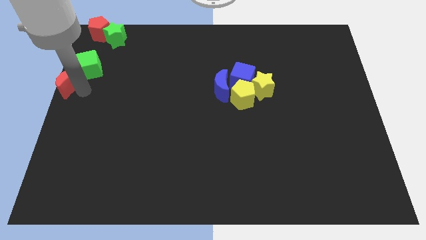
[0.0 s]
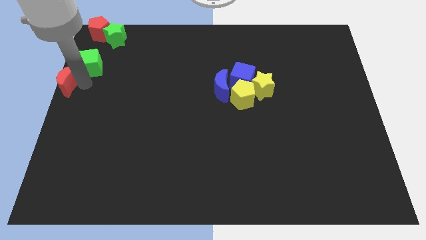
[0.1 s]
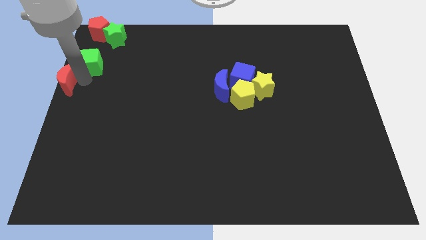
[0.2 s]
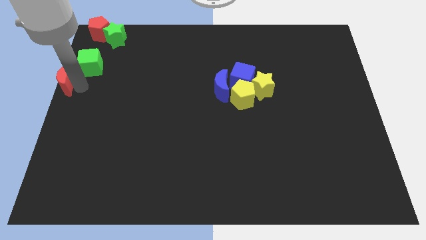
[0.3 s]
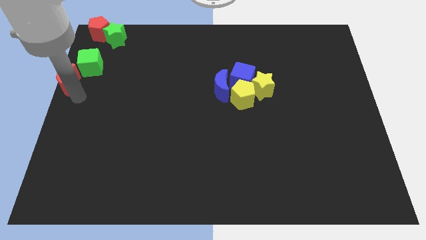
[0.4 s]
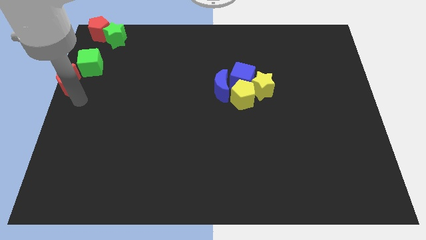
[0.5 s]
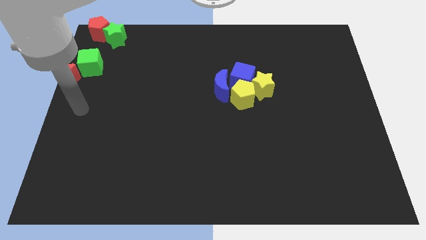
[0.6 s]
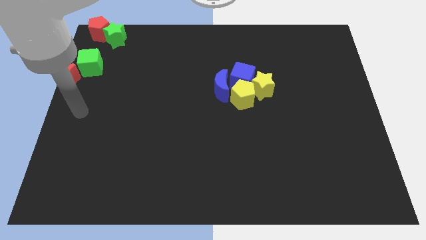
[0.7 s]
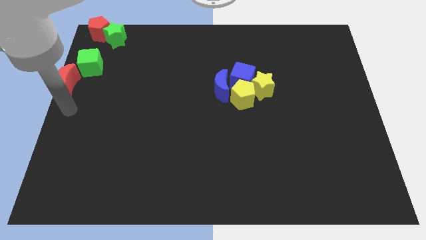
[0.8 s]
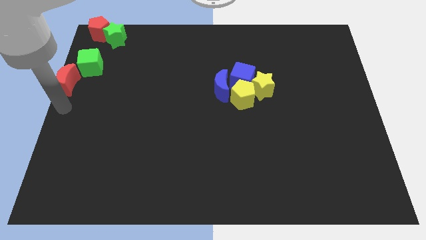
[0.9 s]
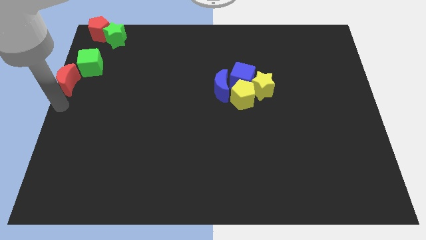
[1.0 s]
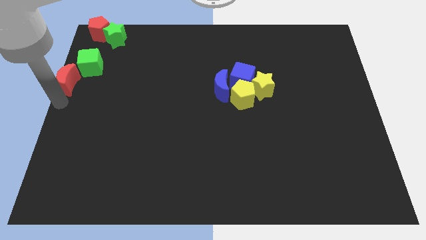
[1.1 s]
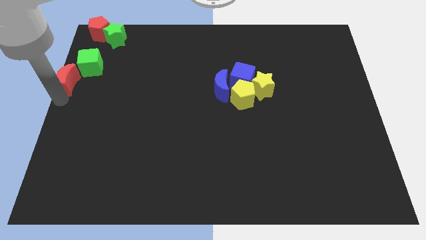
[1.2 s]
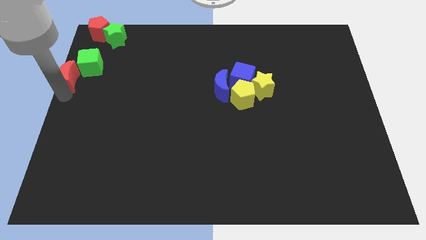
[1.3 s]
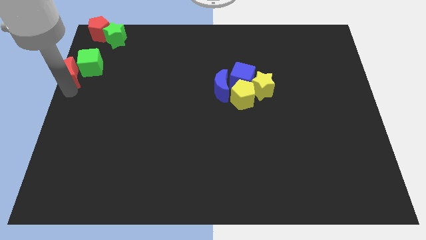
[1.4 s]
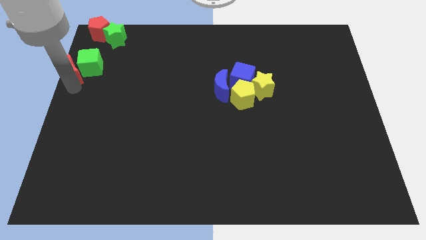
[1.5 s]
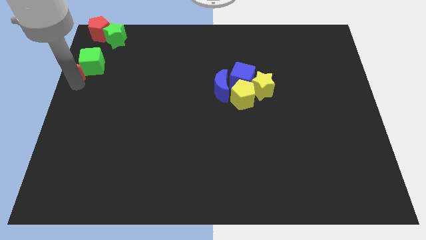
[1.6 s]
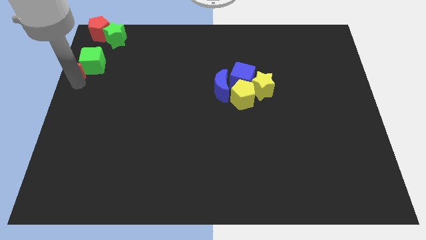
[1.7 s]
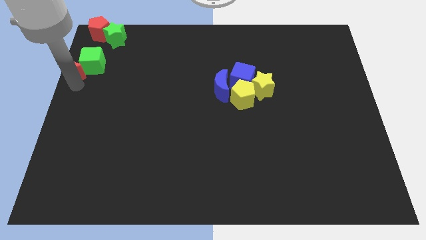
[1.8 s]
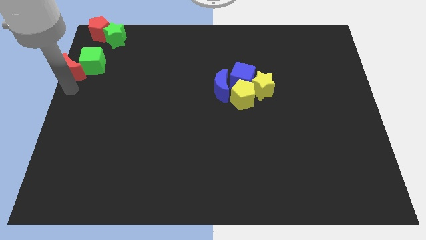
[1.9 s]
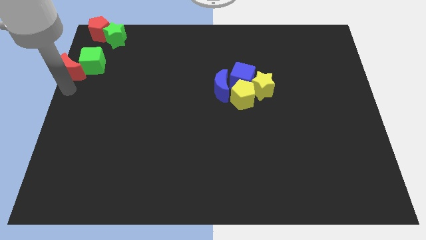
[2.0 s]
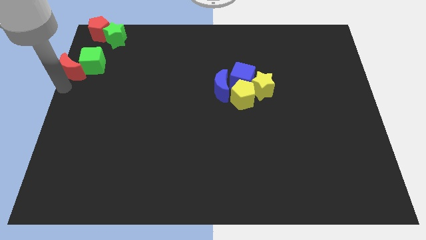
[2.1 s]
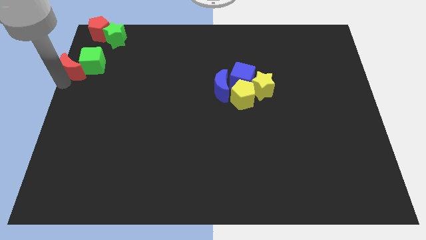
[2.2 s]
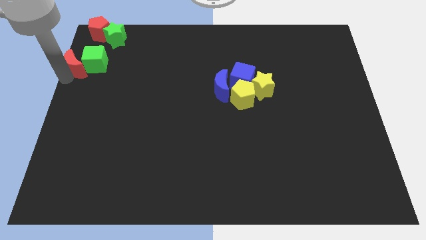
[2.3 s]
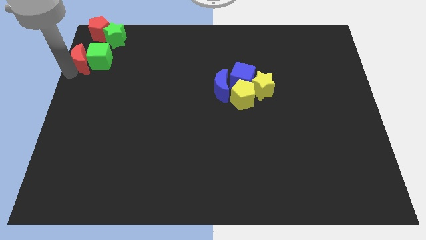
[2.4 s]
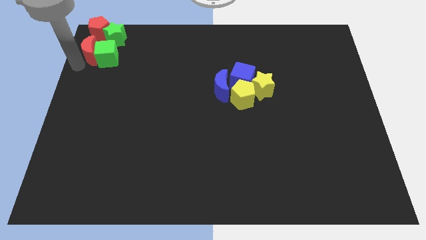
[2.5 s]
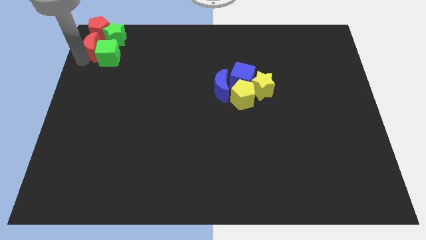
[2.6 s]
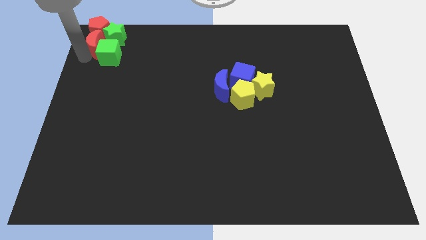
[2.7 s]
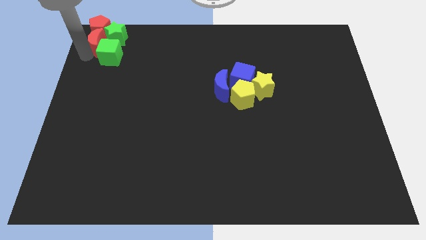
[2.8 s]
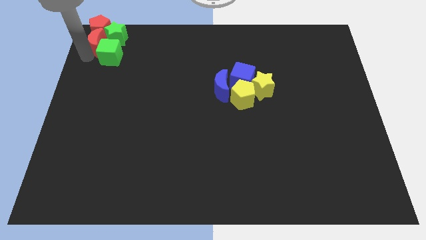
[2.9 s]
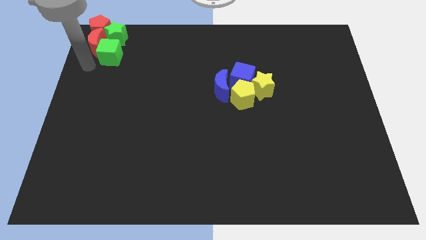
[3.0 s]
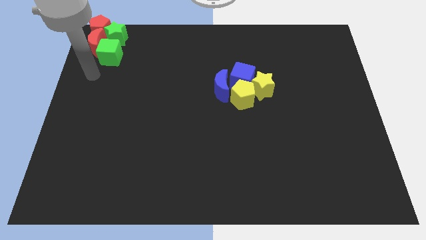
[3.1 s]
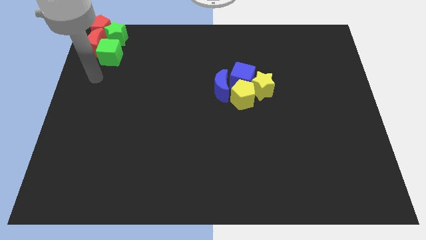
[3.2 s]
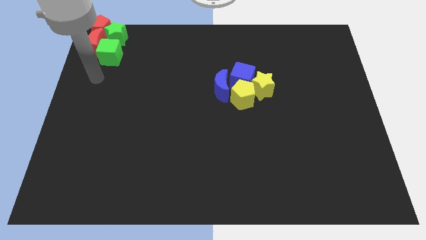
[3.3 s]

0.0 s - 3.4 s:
place the red crescent towards the bottom of the red pentagon

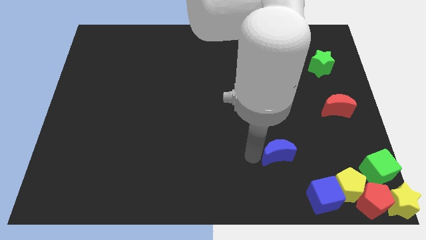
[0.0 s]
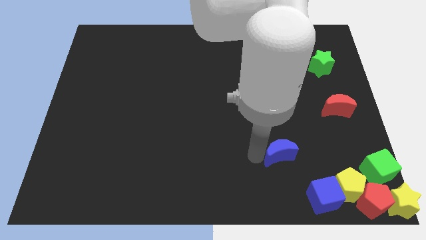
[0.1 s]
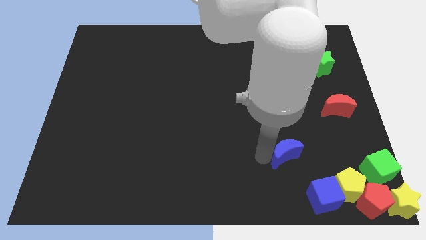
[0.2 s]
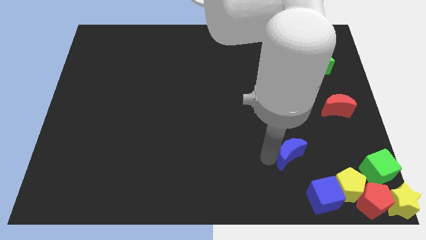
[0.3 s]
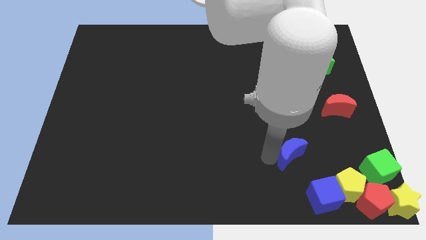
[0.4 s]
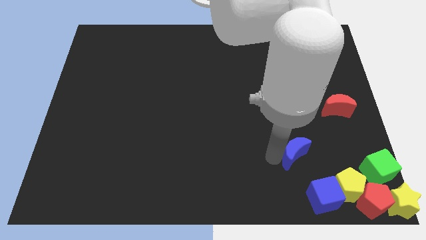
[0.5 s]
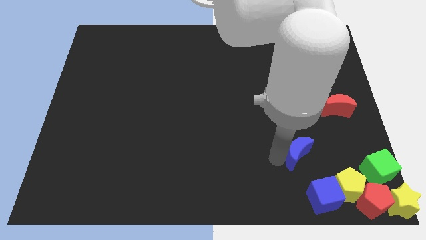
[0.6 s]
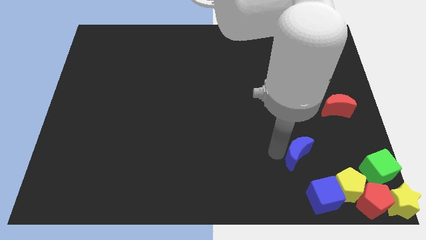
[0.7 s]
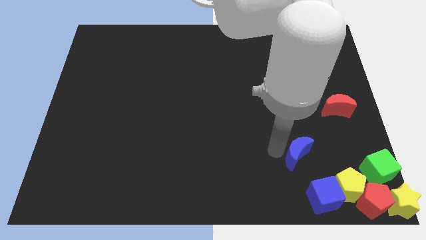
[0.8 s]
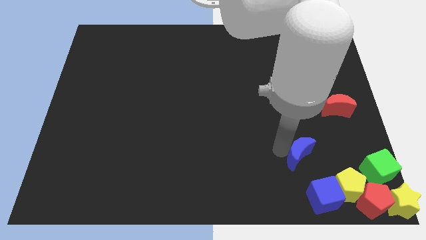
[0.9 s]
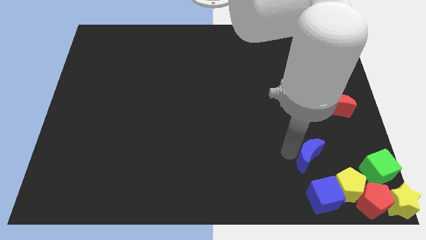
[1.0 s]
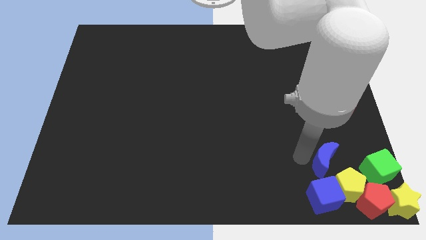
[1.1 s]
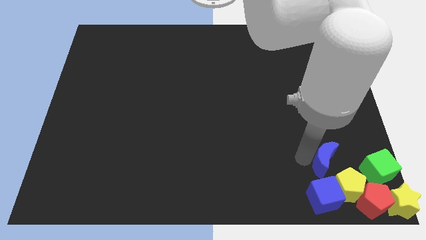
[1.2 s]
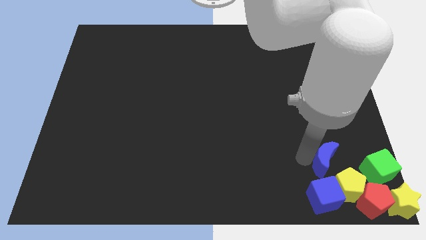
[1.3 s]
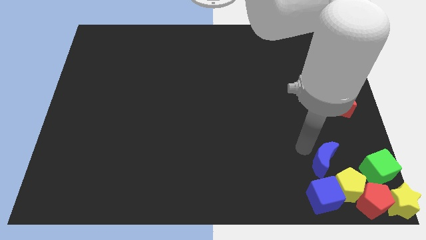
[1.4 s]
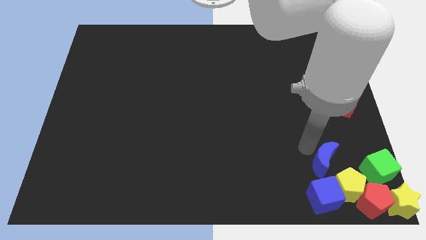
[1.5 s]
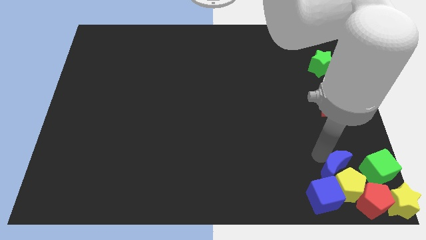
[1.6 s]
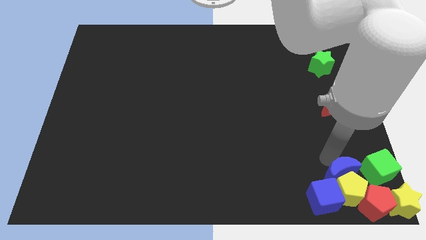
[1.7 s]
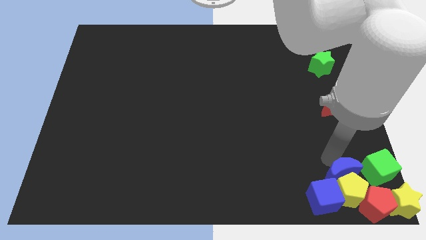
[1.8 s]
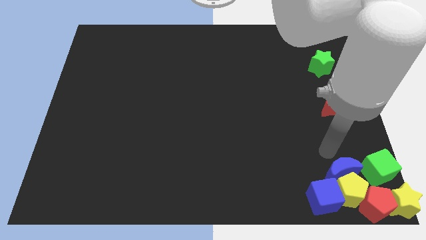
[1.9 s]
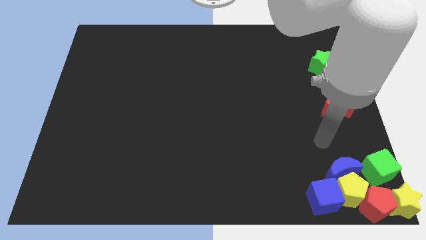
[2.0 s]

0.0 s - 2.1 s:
move blue crescent left to the green cube

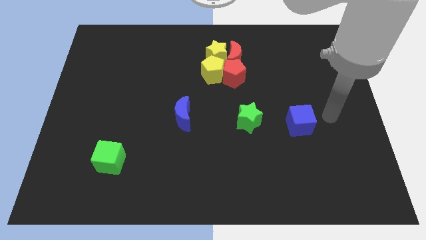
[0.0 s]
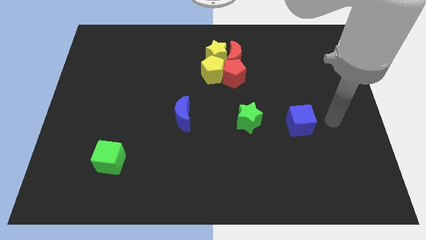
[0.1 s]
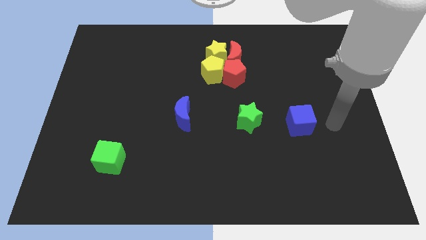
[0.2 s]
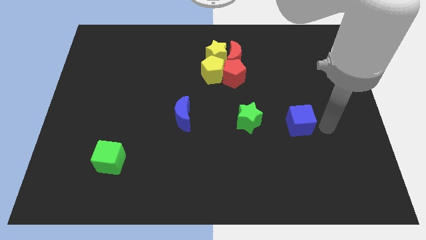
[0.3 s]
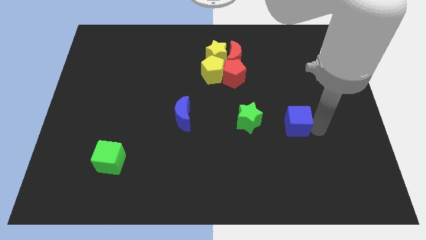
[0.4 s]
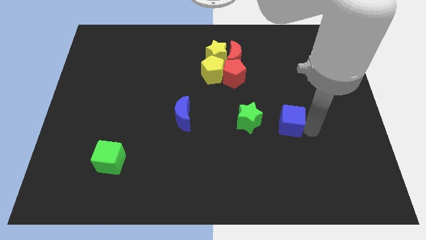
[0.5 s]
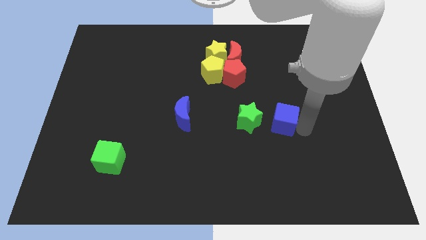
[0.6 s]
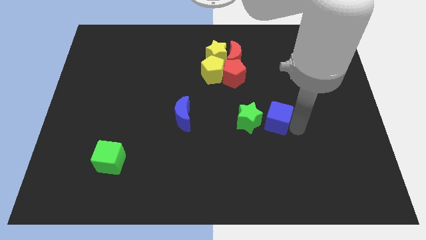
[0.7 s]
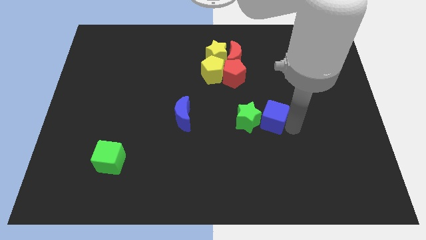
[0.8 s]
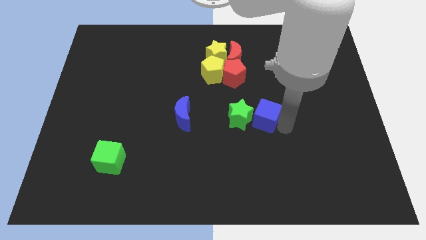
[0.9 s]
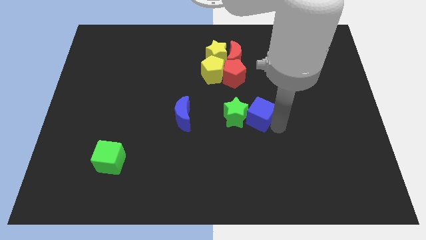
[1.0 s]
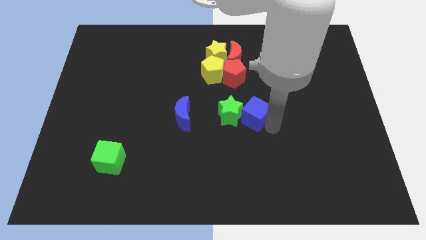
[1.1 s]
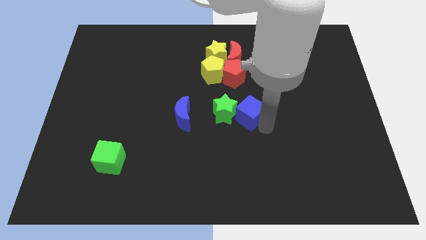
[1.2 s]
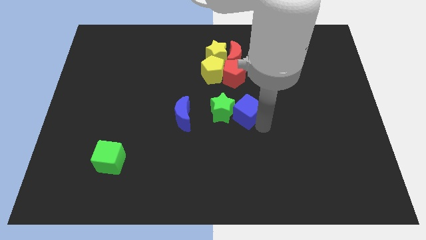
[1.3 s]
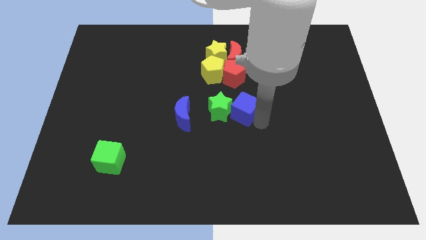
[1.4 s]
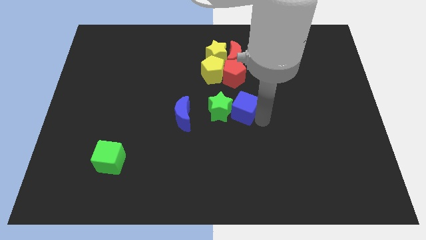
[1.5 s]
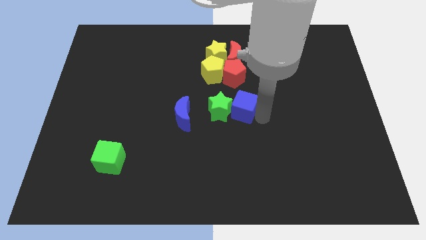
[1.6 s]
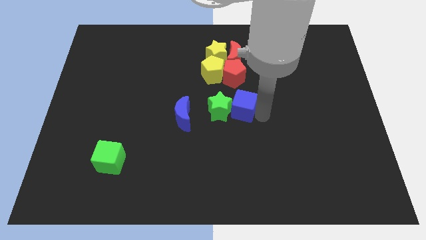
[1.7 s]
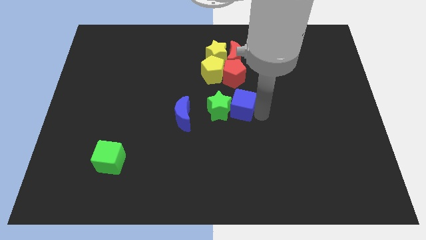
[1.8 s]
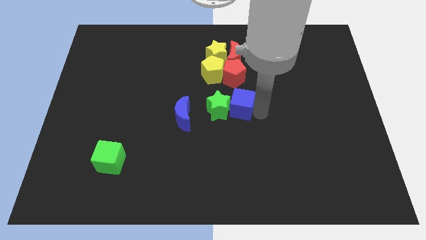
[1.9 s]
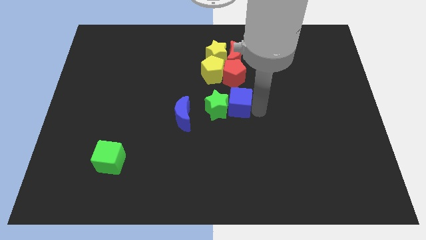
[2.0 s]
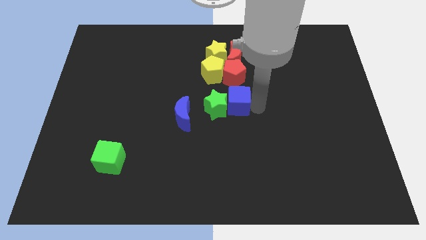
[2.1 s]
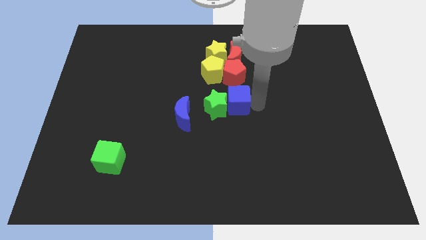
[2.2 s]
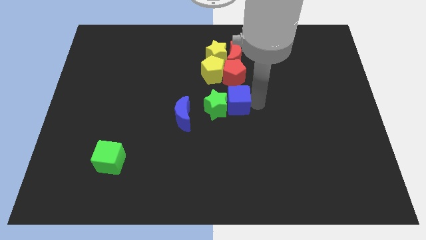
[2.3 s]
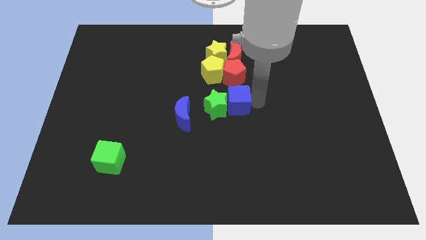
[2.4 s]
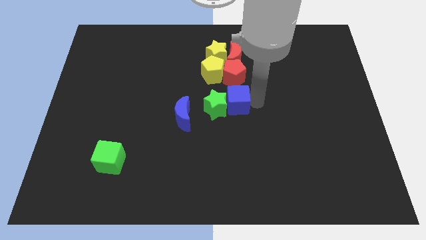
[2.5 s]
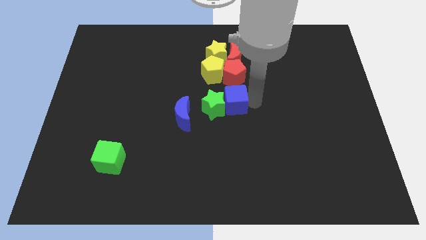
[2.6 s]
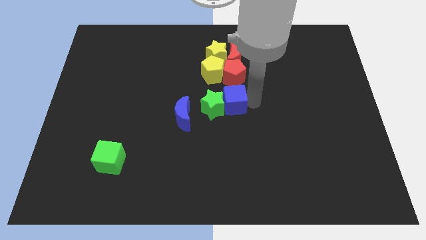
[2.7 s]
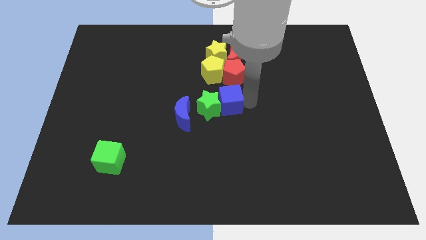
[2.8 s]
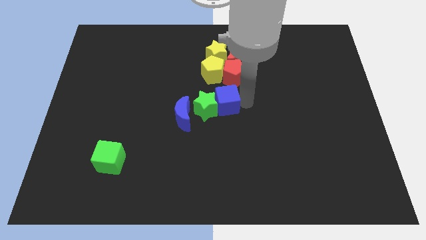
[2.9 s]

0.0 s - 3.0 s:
push the green star in the center of the board

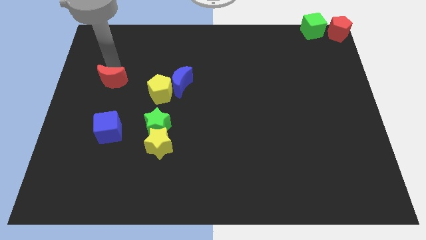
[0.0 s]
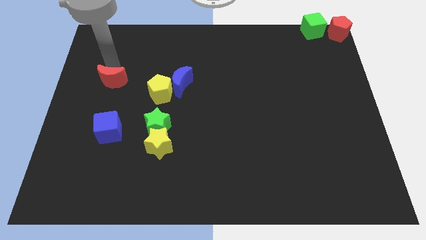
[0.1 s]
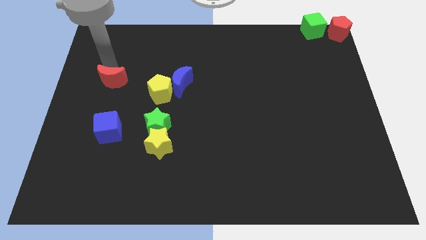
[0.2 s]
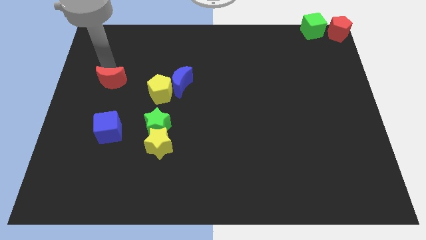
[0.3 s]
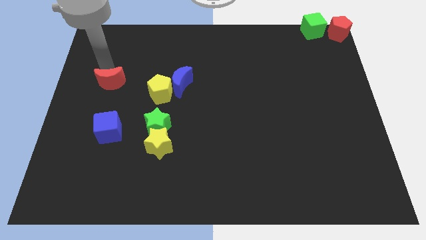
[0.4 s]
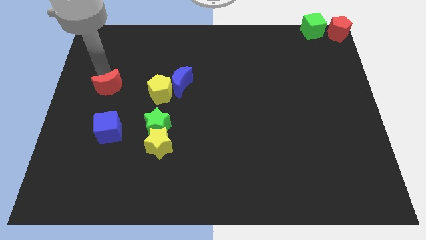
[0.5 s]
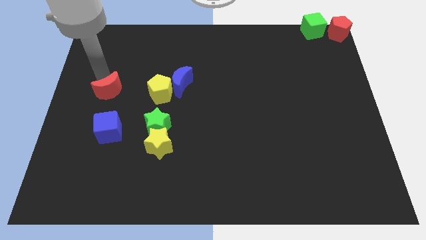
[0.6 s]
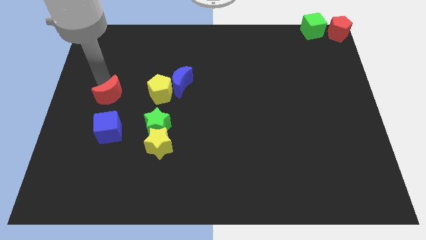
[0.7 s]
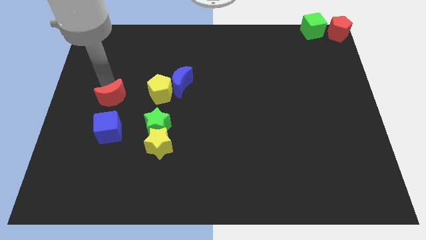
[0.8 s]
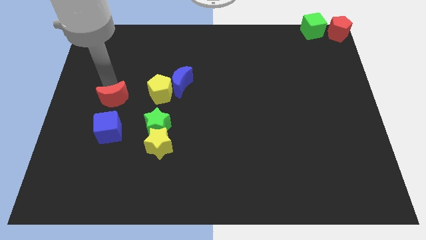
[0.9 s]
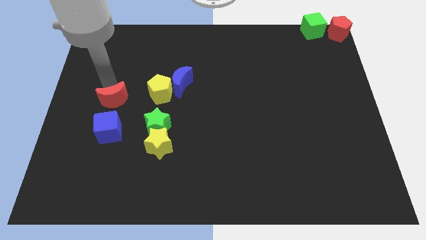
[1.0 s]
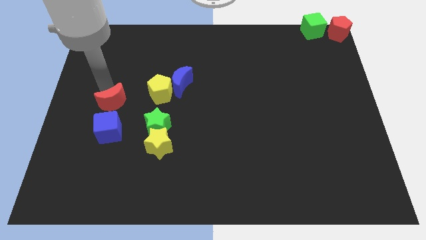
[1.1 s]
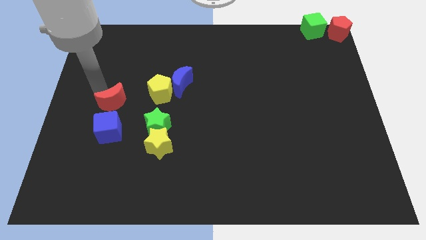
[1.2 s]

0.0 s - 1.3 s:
move the red crescent close to the blue cube
